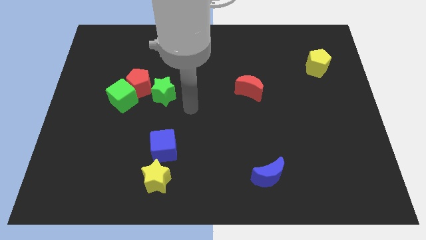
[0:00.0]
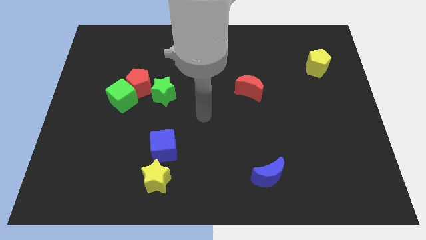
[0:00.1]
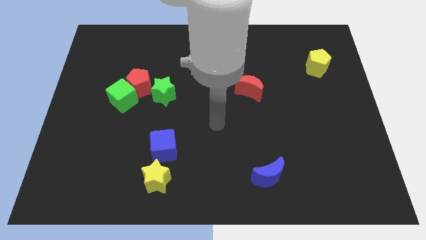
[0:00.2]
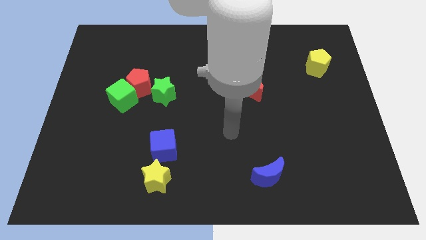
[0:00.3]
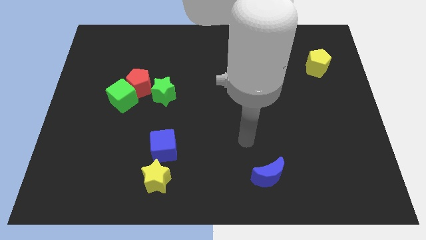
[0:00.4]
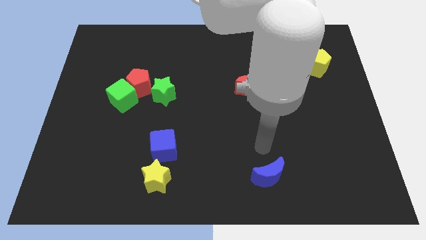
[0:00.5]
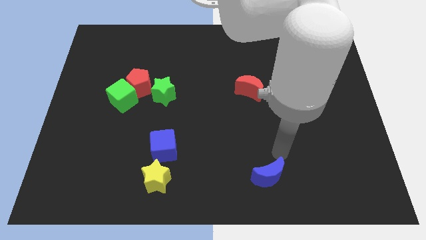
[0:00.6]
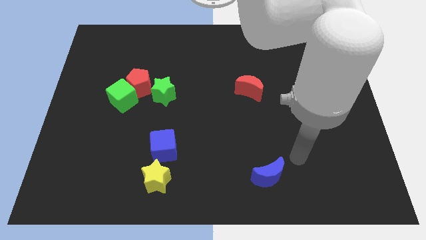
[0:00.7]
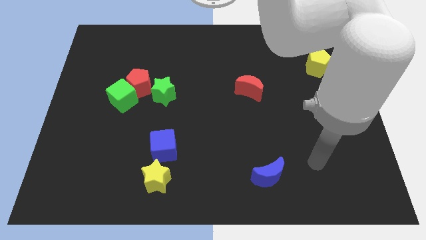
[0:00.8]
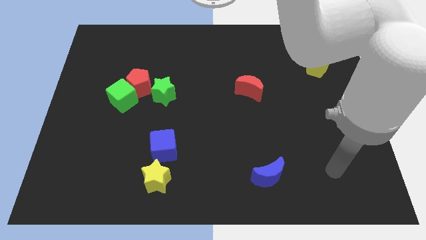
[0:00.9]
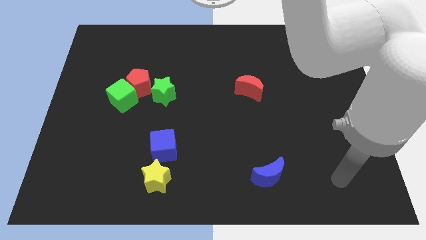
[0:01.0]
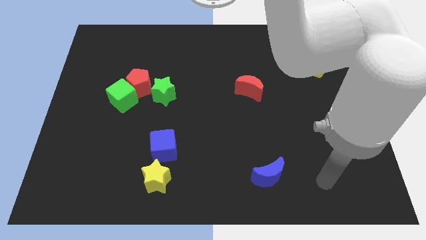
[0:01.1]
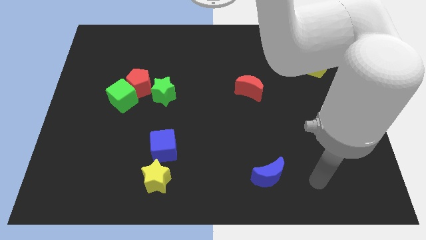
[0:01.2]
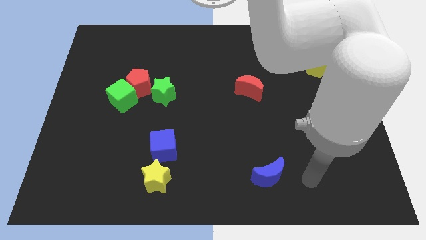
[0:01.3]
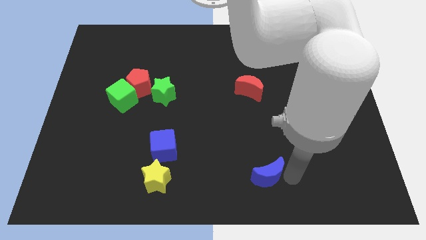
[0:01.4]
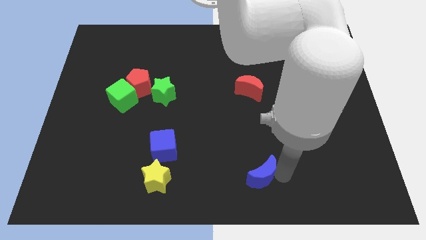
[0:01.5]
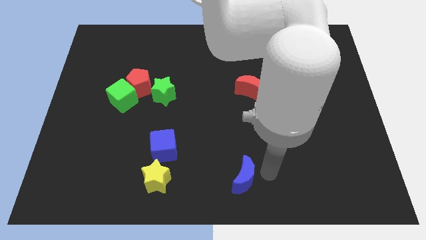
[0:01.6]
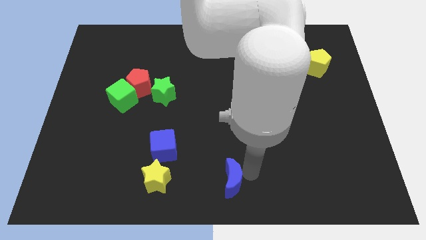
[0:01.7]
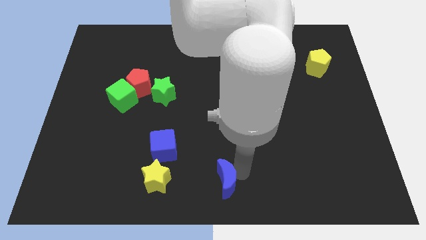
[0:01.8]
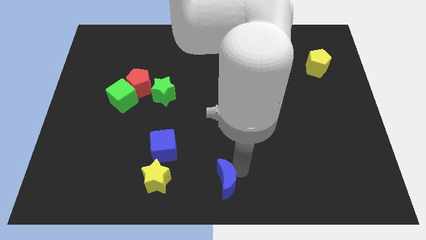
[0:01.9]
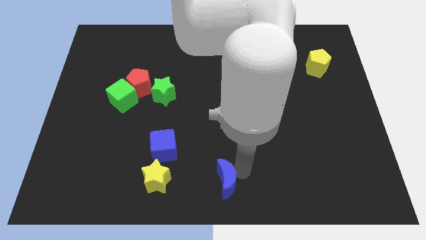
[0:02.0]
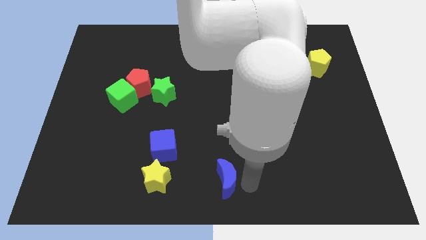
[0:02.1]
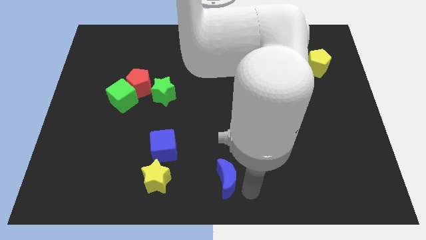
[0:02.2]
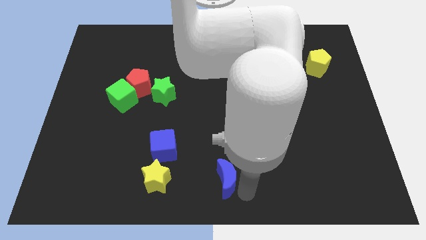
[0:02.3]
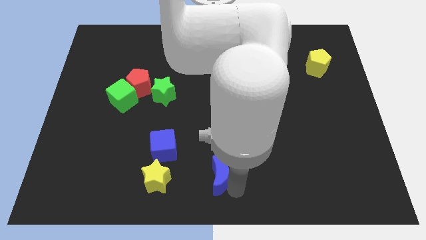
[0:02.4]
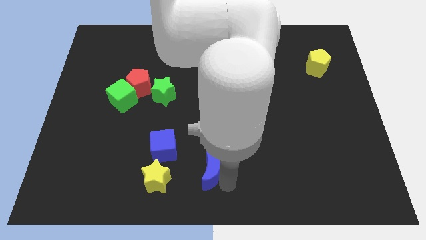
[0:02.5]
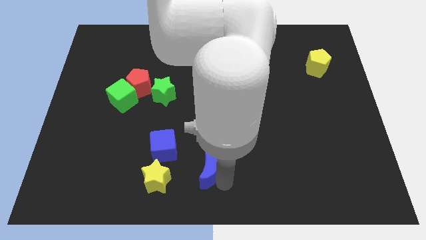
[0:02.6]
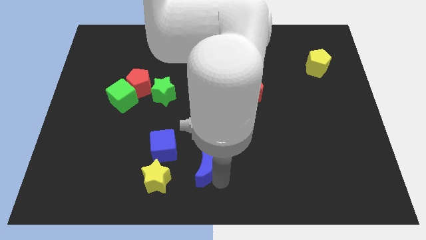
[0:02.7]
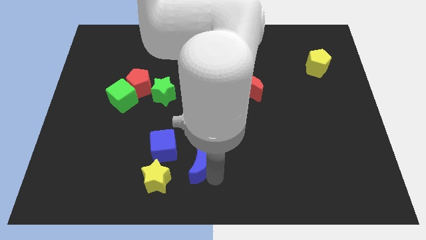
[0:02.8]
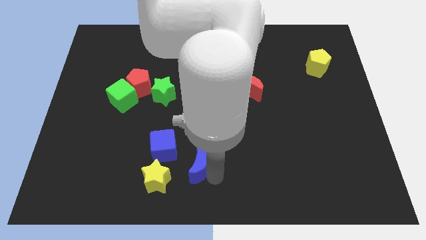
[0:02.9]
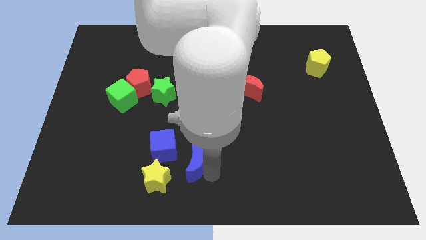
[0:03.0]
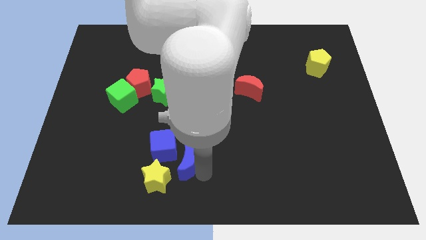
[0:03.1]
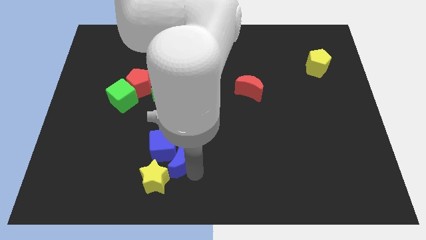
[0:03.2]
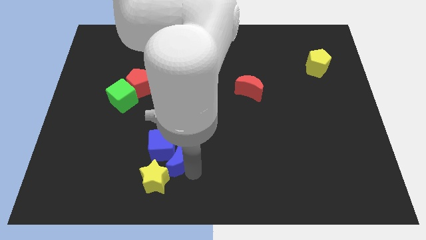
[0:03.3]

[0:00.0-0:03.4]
move the blue crescent into the bottom right of the blue cube

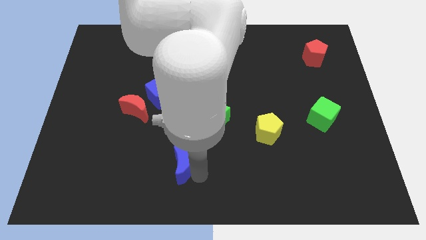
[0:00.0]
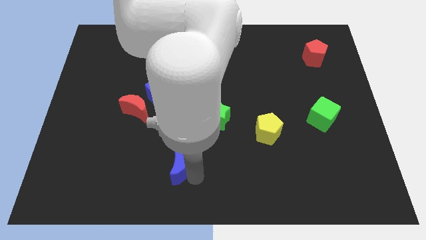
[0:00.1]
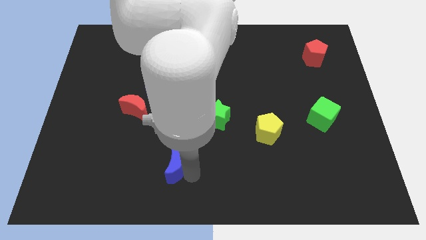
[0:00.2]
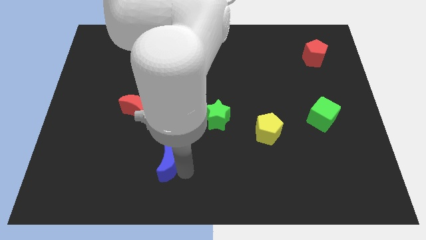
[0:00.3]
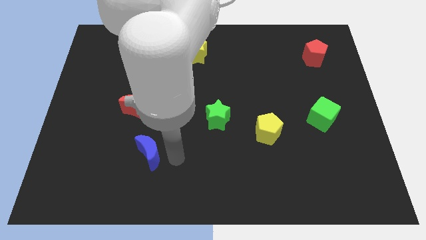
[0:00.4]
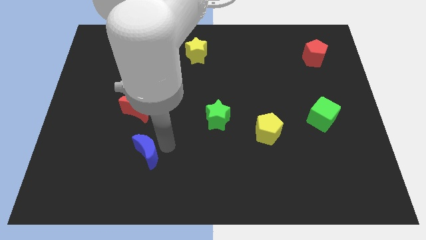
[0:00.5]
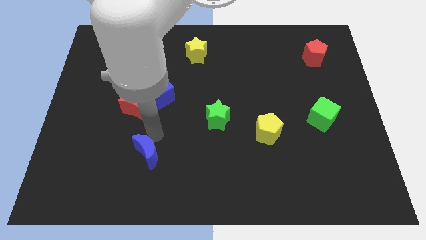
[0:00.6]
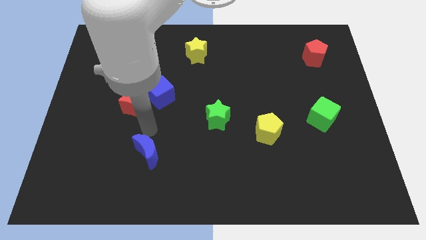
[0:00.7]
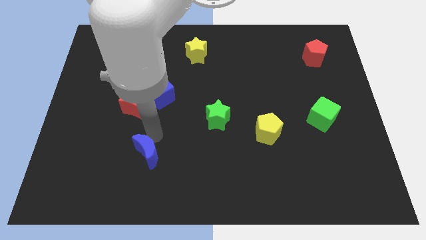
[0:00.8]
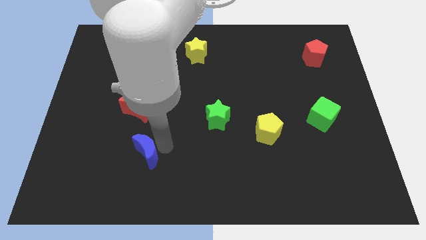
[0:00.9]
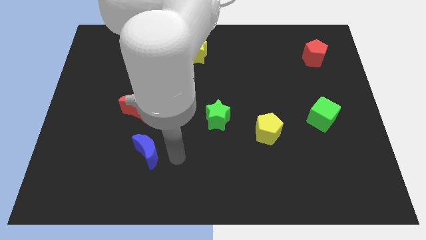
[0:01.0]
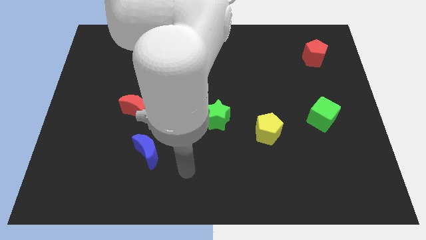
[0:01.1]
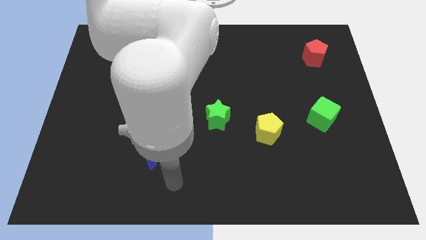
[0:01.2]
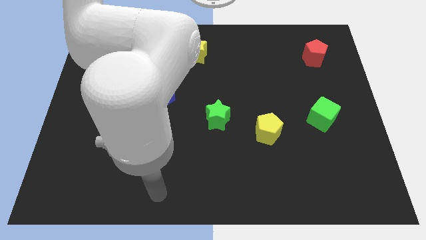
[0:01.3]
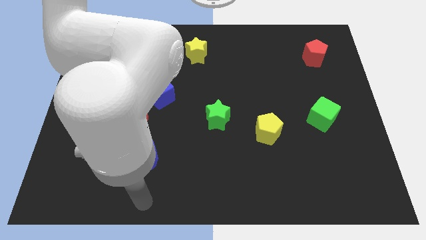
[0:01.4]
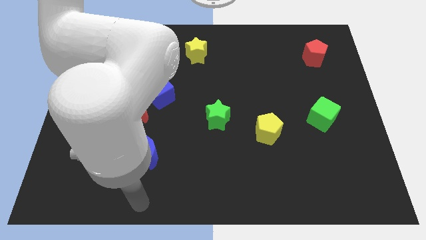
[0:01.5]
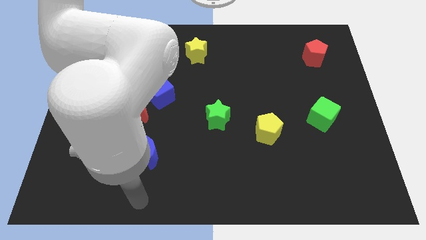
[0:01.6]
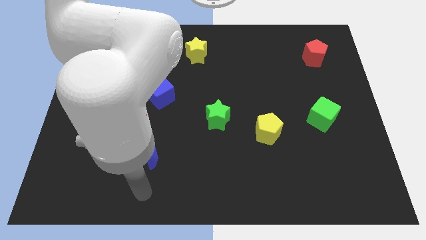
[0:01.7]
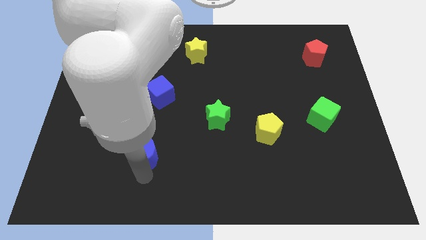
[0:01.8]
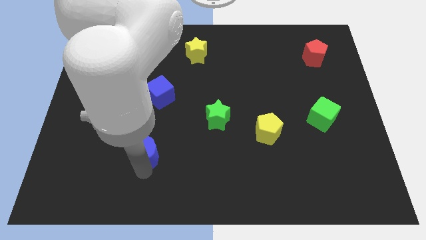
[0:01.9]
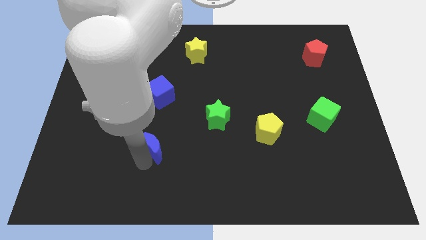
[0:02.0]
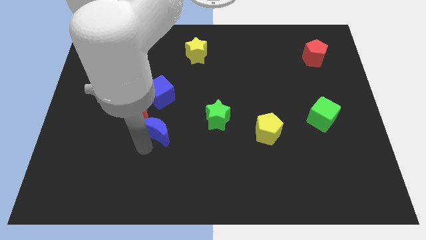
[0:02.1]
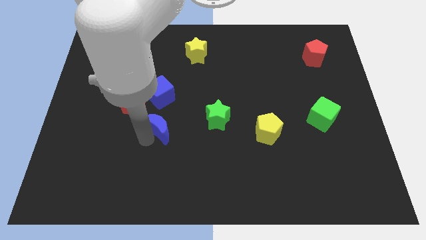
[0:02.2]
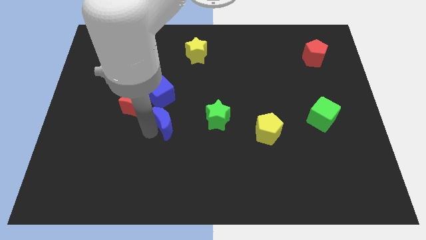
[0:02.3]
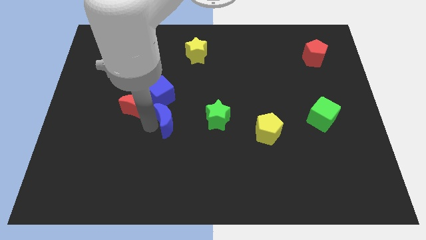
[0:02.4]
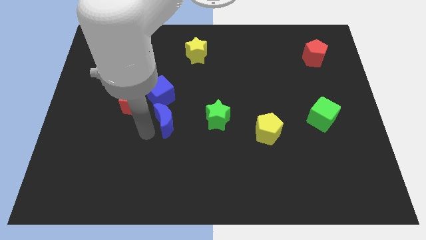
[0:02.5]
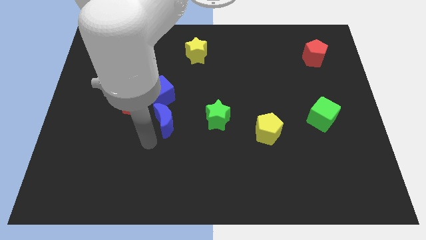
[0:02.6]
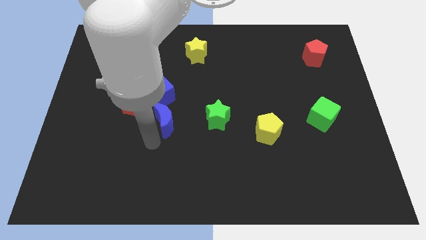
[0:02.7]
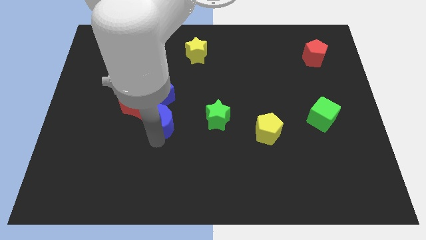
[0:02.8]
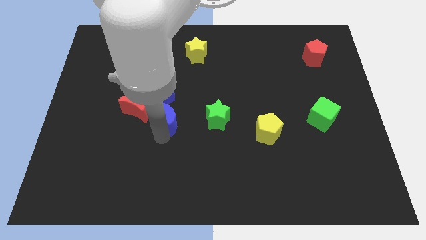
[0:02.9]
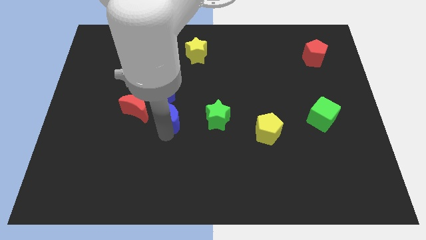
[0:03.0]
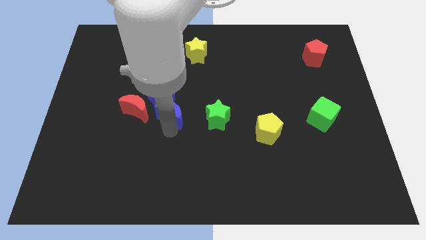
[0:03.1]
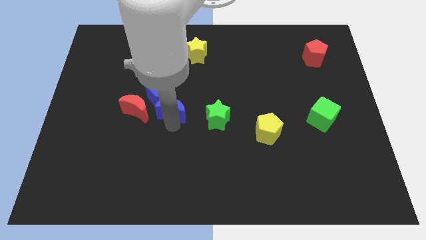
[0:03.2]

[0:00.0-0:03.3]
place blue moon to the right of red moon

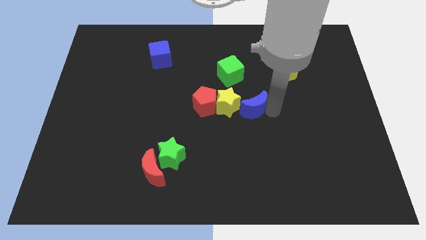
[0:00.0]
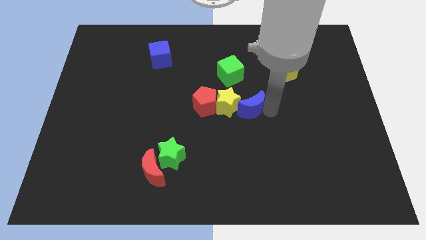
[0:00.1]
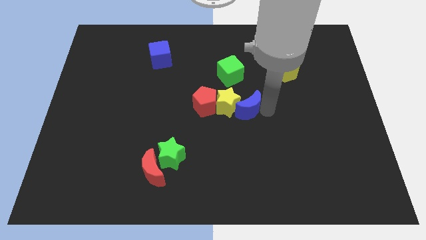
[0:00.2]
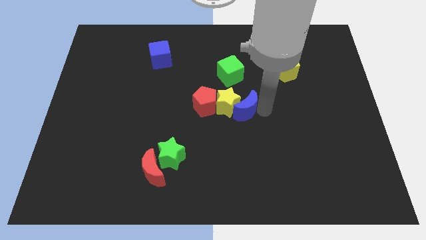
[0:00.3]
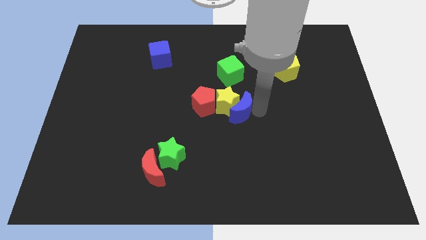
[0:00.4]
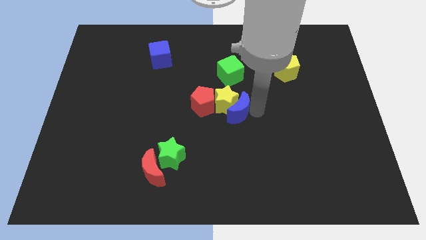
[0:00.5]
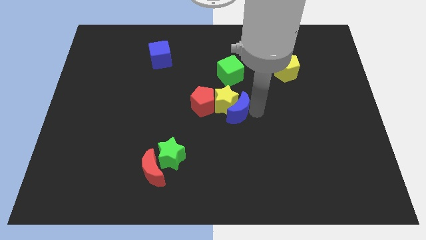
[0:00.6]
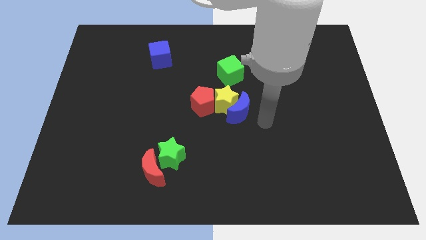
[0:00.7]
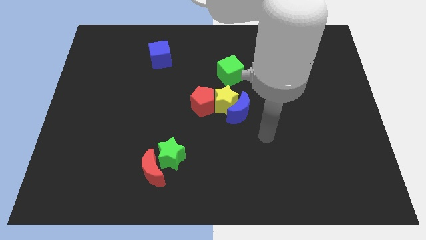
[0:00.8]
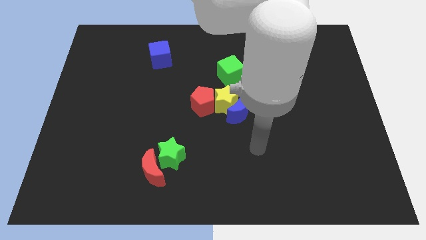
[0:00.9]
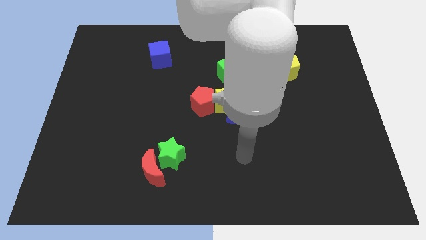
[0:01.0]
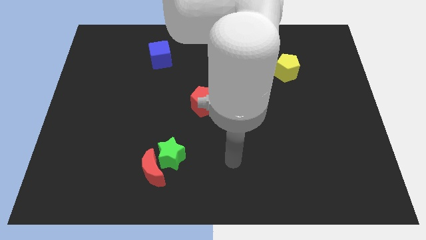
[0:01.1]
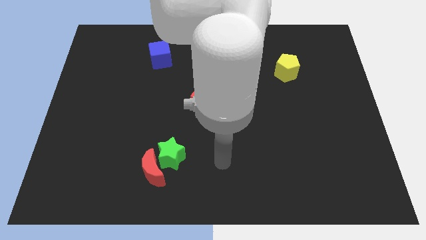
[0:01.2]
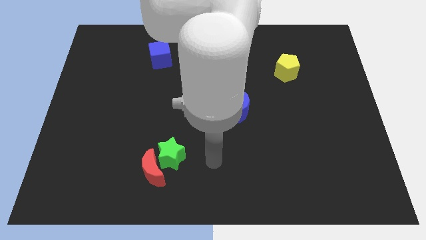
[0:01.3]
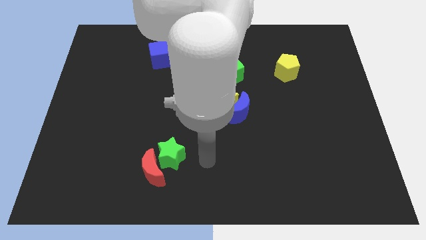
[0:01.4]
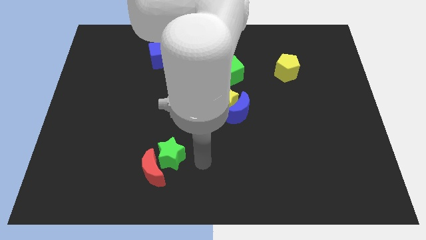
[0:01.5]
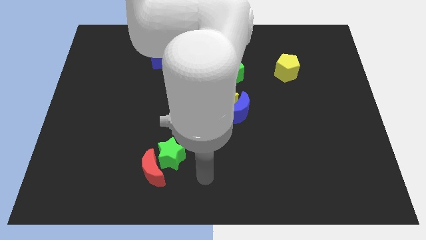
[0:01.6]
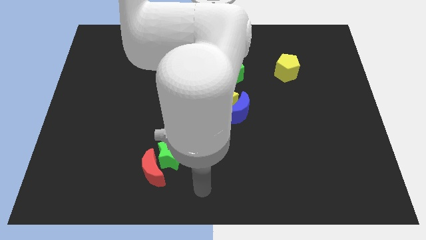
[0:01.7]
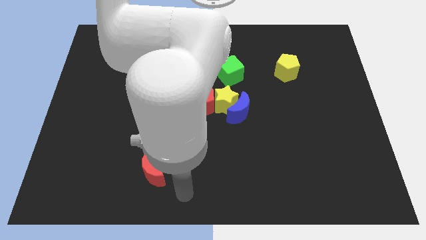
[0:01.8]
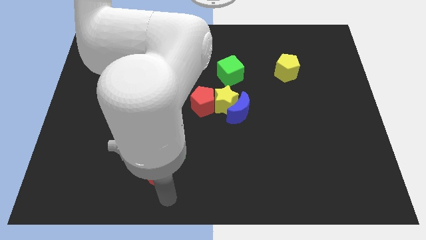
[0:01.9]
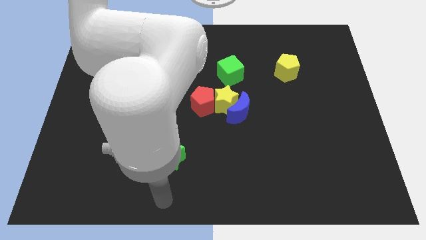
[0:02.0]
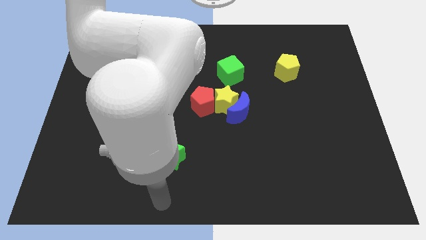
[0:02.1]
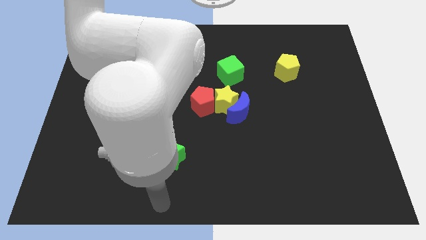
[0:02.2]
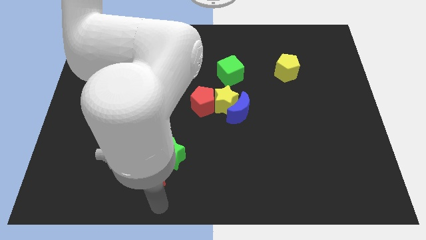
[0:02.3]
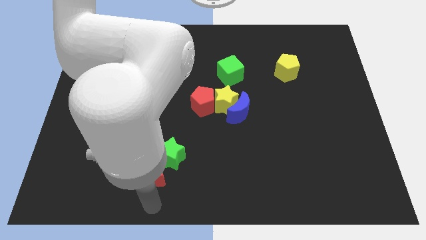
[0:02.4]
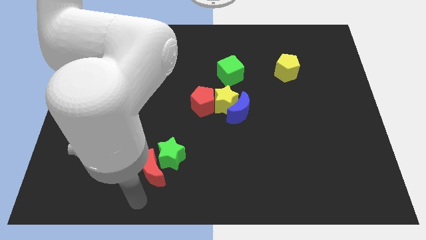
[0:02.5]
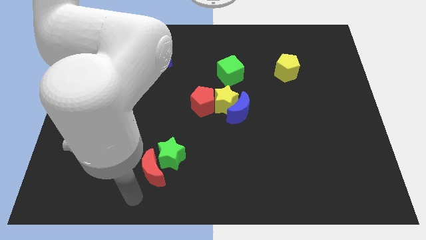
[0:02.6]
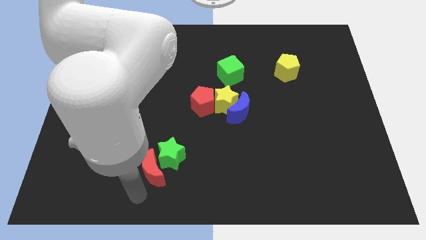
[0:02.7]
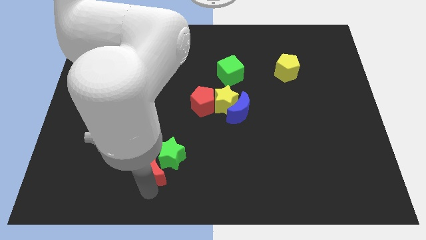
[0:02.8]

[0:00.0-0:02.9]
move the arm to the red moon
